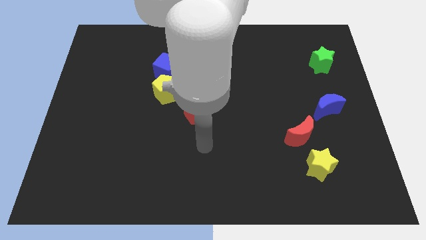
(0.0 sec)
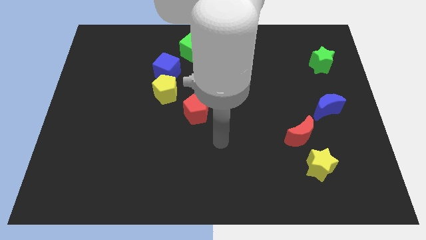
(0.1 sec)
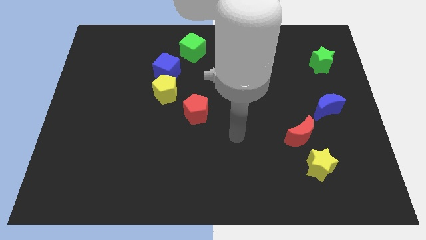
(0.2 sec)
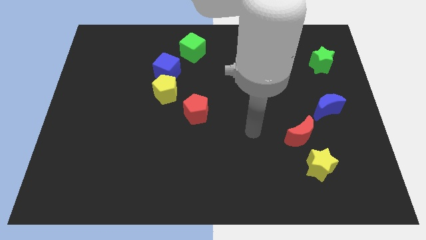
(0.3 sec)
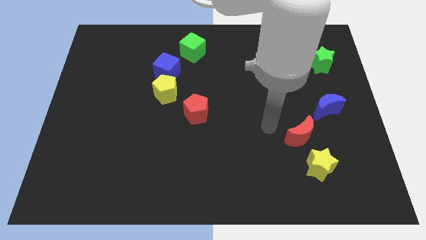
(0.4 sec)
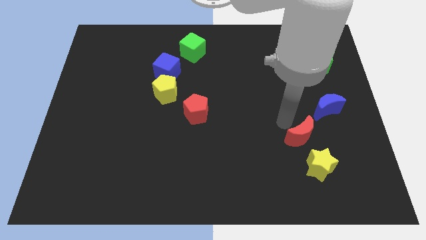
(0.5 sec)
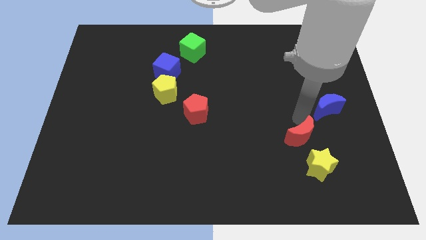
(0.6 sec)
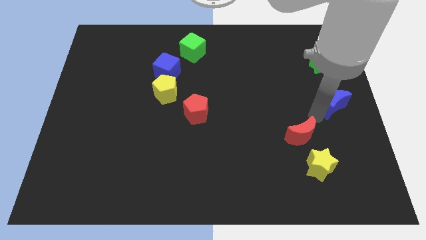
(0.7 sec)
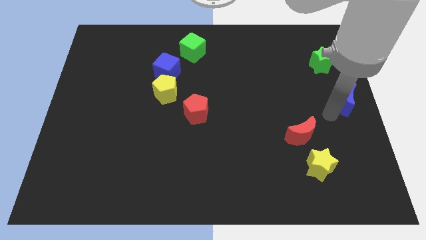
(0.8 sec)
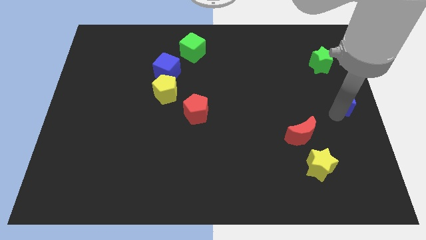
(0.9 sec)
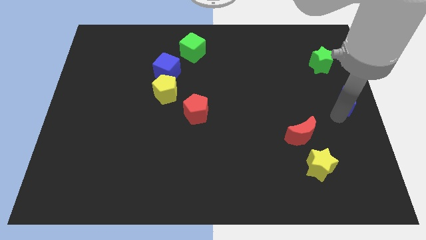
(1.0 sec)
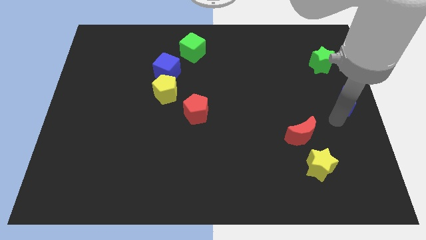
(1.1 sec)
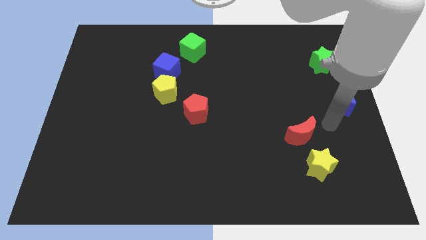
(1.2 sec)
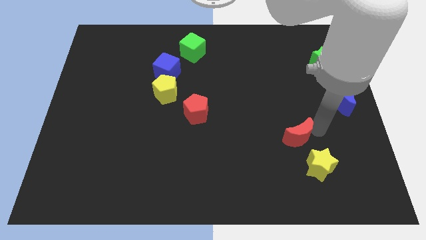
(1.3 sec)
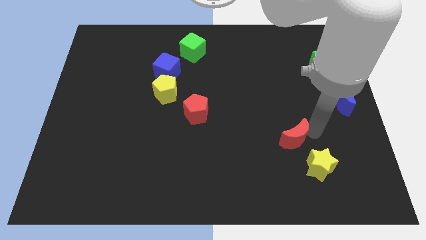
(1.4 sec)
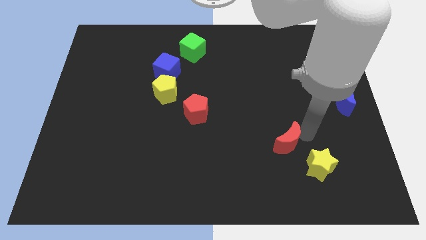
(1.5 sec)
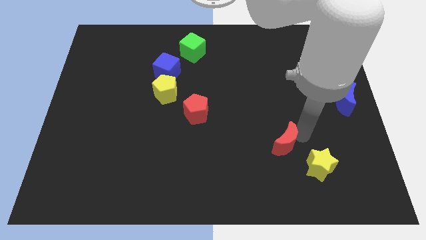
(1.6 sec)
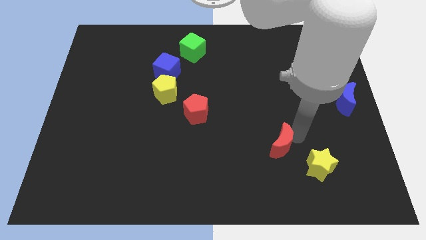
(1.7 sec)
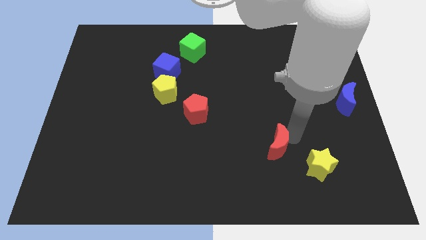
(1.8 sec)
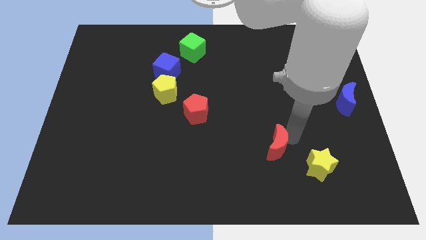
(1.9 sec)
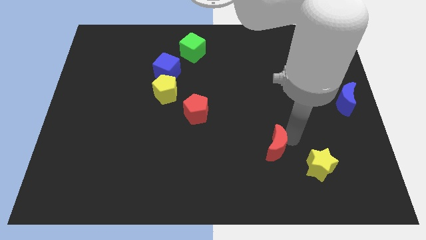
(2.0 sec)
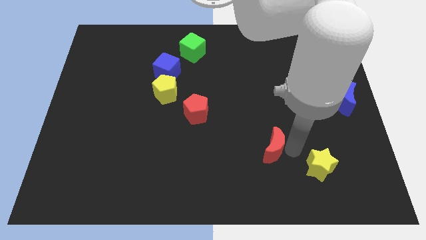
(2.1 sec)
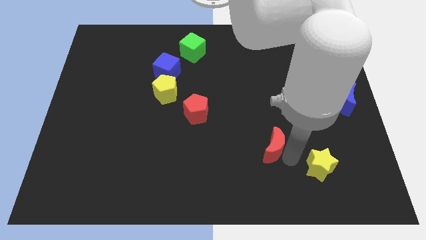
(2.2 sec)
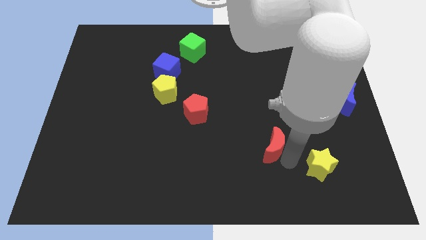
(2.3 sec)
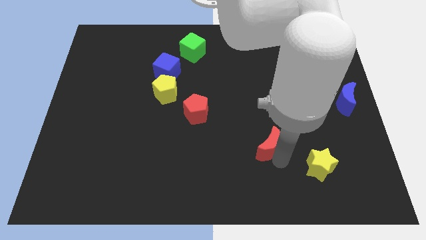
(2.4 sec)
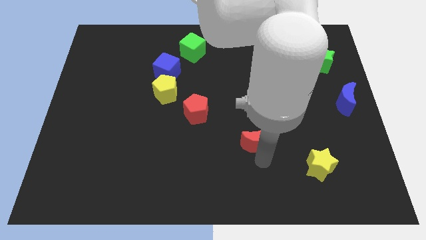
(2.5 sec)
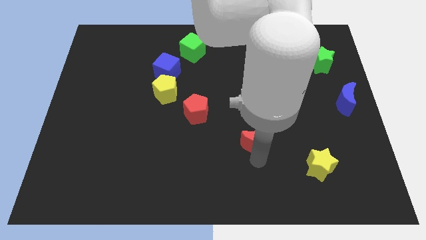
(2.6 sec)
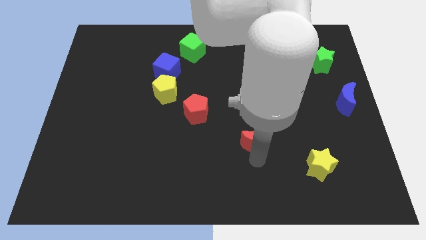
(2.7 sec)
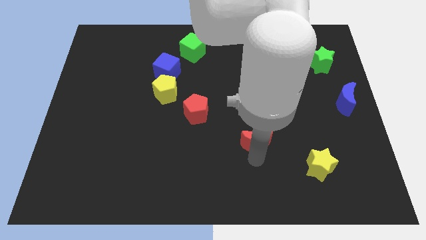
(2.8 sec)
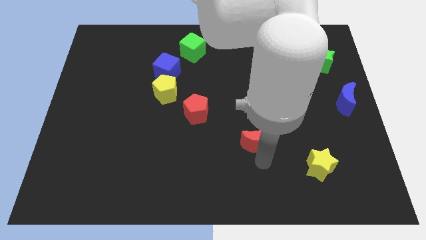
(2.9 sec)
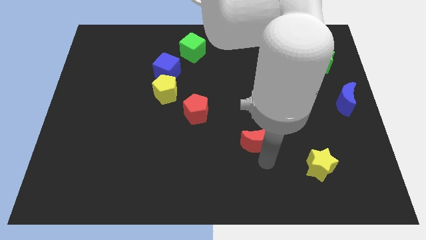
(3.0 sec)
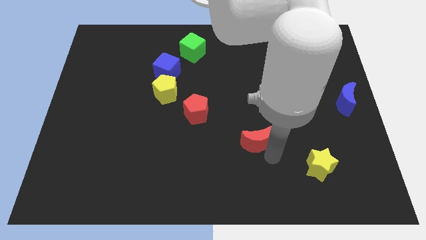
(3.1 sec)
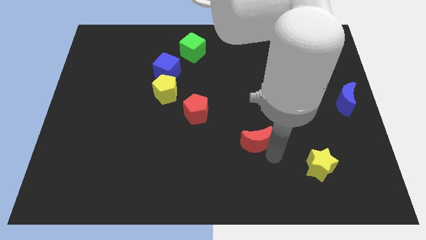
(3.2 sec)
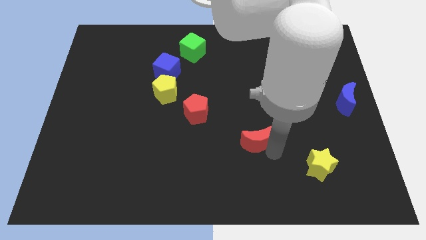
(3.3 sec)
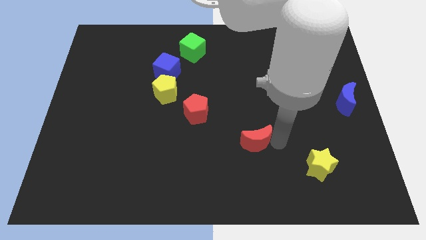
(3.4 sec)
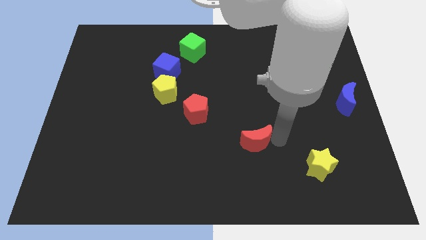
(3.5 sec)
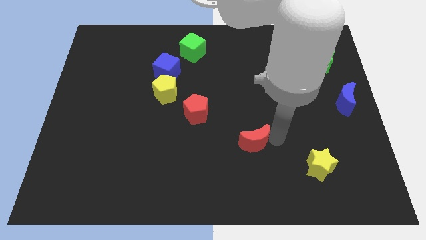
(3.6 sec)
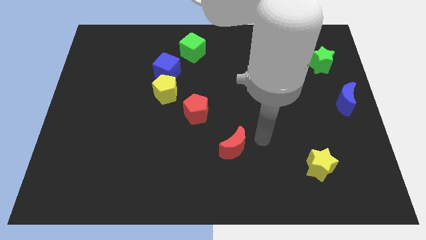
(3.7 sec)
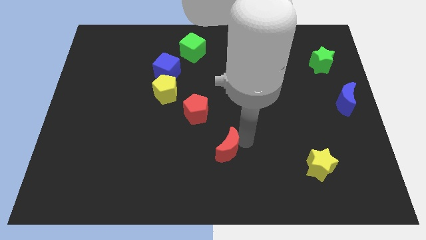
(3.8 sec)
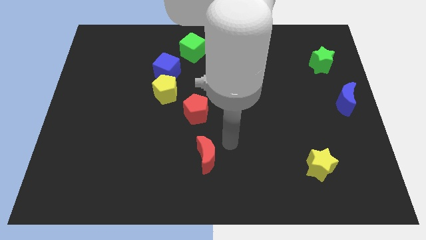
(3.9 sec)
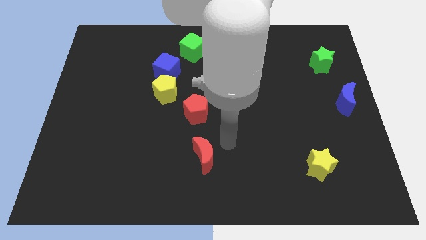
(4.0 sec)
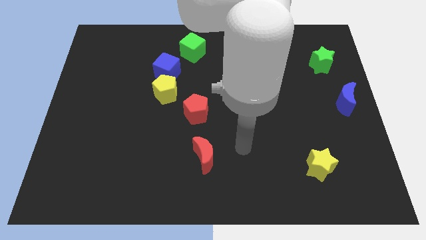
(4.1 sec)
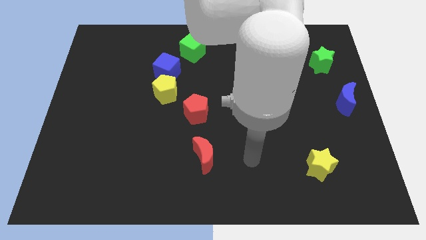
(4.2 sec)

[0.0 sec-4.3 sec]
place the red crescent below the red pentagon

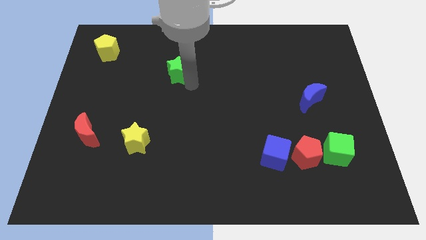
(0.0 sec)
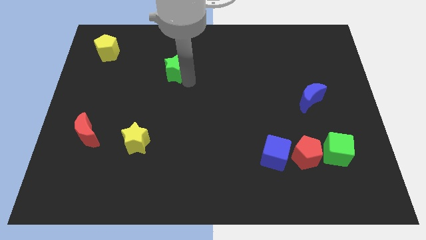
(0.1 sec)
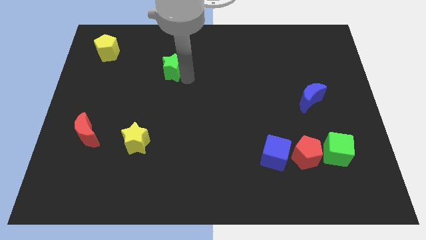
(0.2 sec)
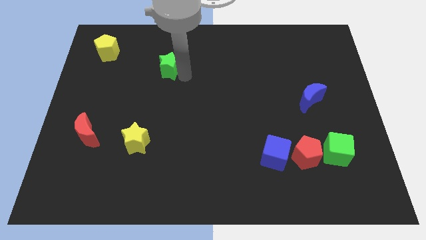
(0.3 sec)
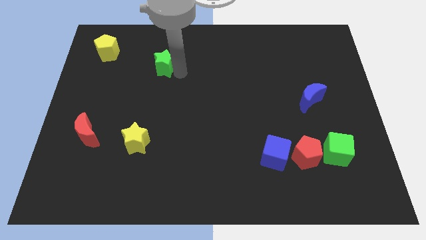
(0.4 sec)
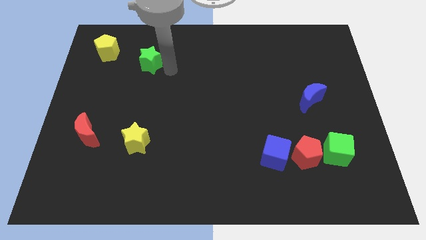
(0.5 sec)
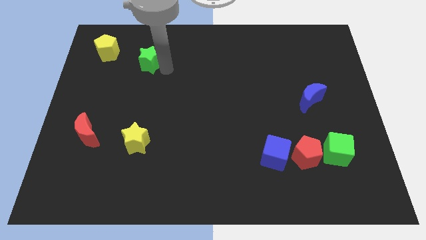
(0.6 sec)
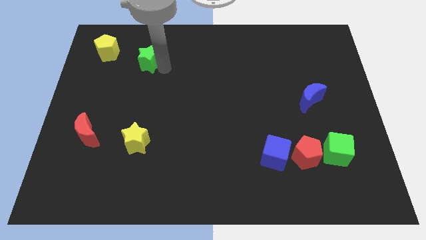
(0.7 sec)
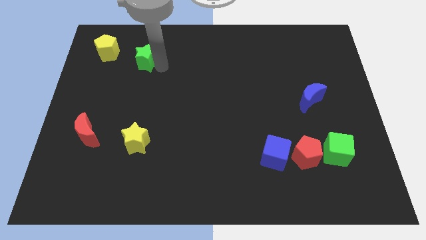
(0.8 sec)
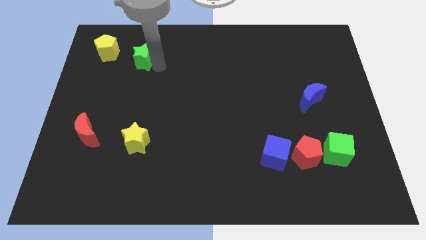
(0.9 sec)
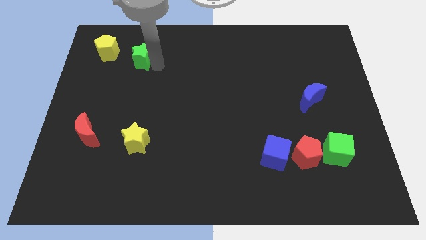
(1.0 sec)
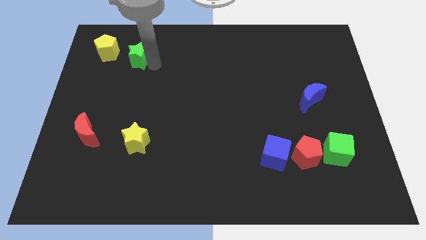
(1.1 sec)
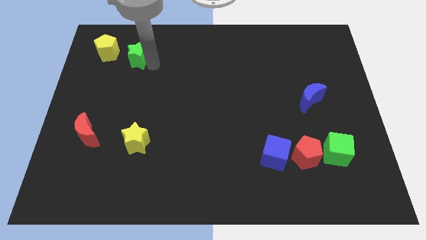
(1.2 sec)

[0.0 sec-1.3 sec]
move the green star slightly towards the yellow pentagon

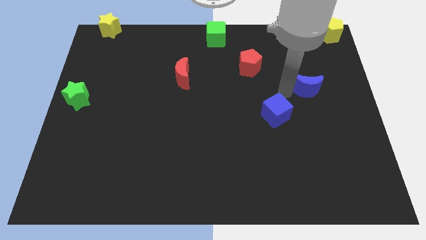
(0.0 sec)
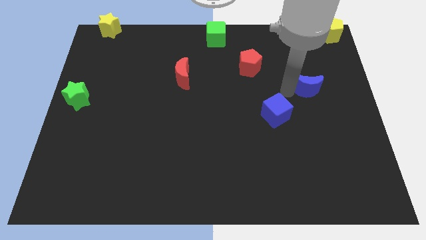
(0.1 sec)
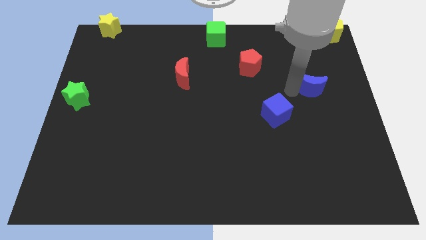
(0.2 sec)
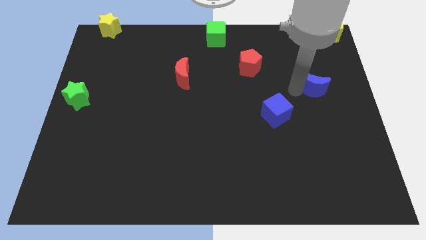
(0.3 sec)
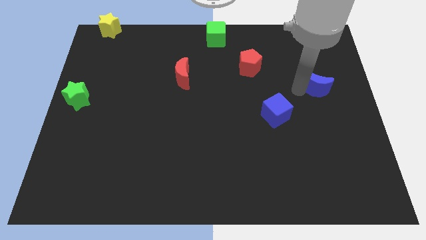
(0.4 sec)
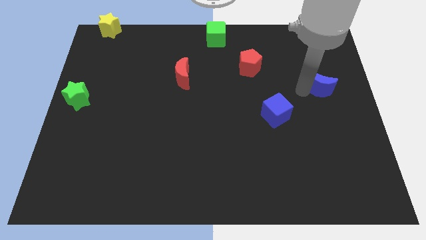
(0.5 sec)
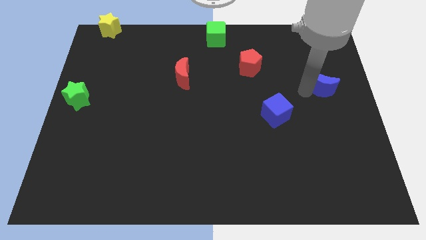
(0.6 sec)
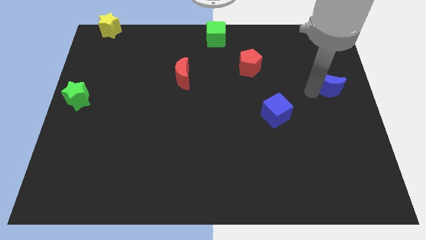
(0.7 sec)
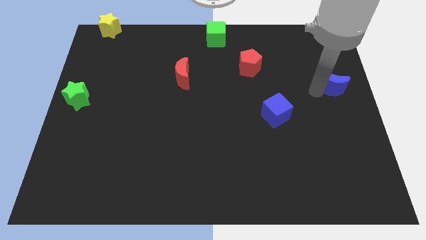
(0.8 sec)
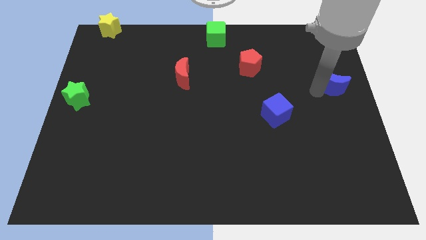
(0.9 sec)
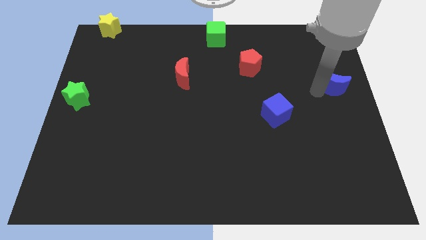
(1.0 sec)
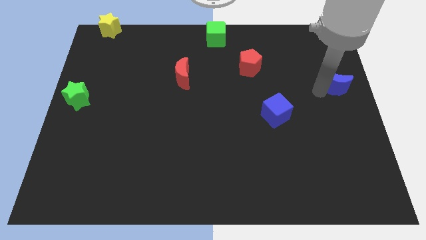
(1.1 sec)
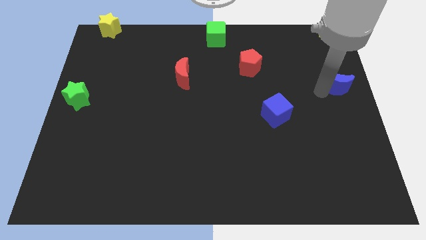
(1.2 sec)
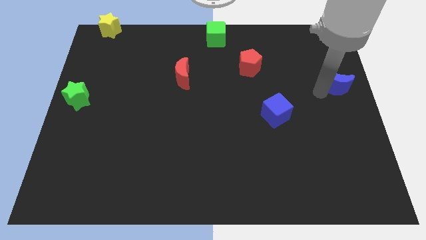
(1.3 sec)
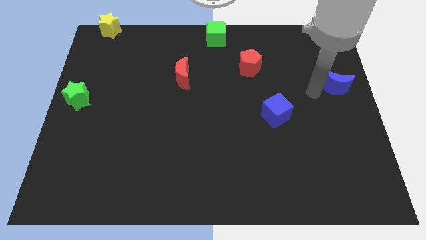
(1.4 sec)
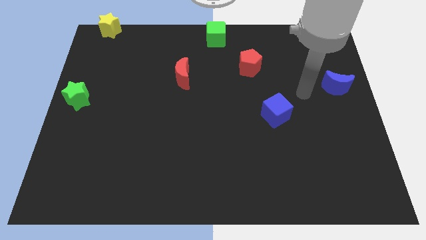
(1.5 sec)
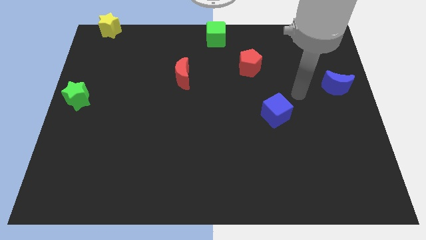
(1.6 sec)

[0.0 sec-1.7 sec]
push the blue moon towards the right side of the table

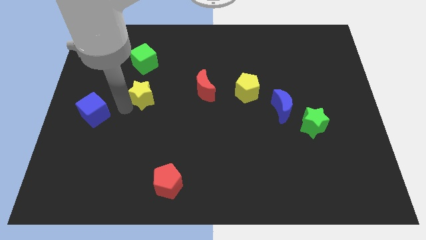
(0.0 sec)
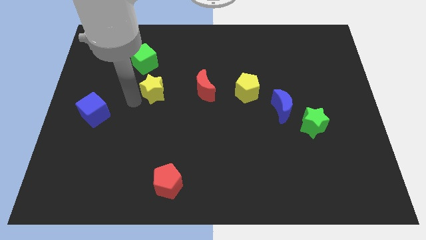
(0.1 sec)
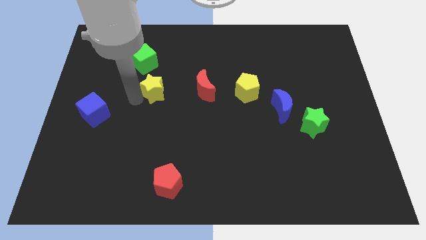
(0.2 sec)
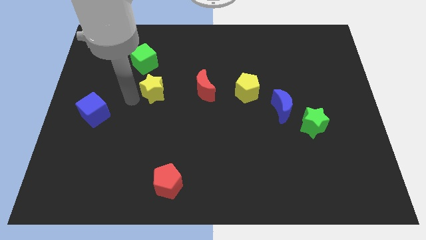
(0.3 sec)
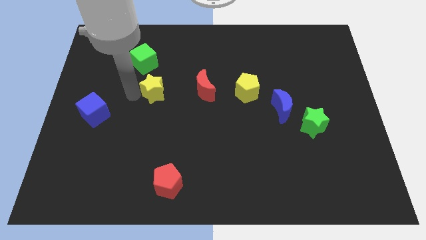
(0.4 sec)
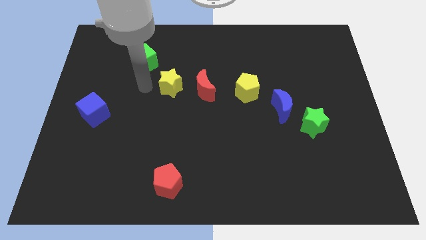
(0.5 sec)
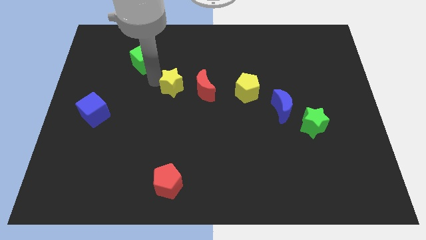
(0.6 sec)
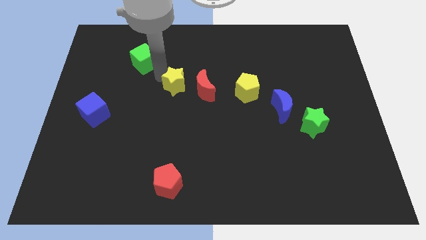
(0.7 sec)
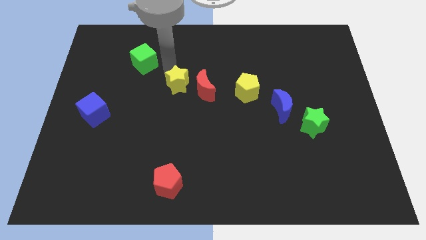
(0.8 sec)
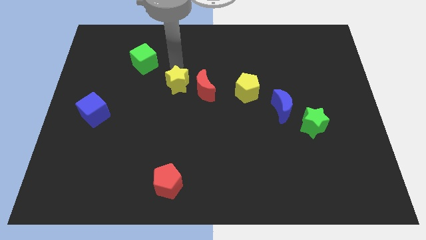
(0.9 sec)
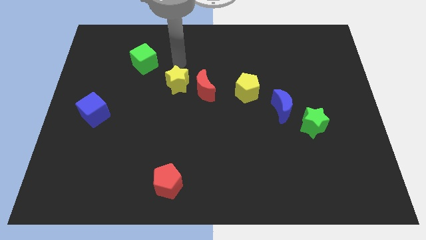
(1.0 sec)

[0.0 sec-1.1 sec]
move the yellow star top left to the red crescent

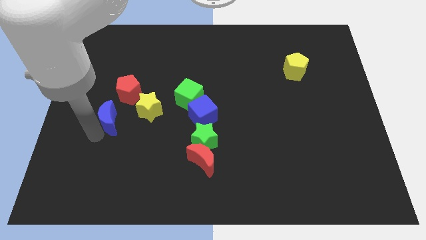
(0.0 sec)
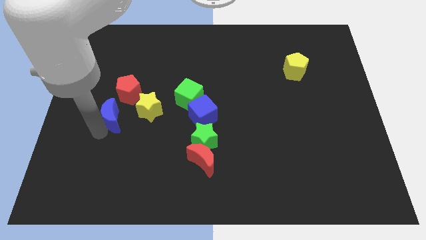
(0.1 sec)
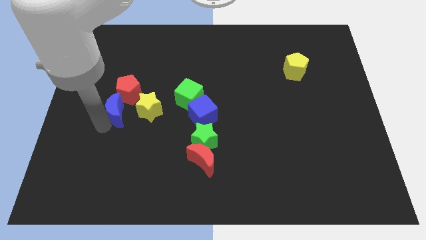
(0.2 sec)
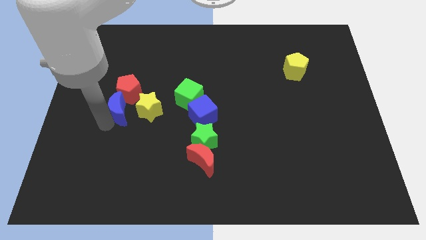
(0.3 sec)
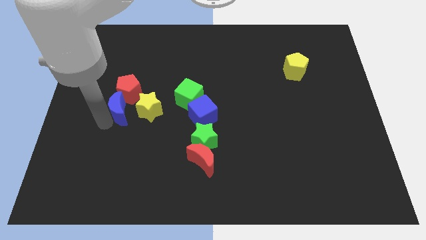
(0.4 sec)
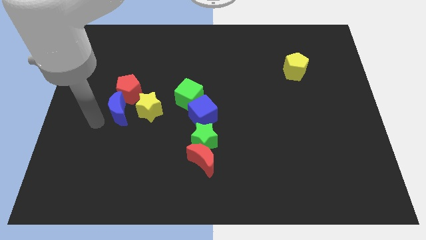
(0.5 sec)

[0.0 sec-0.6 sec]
push the blue moon into the red pentagon
